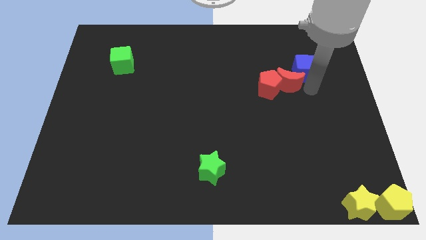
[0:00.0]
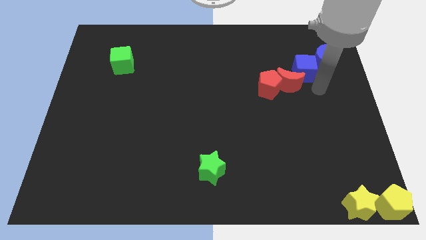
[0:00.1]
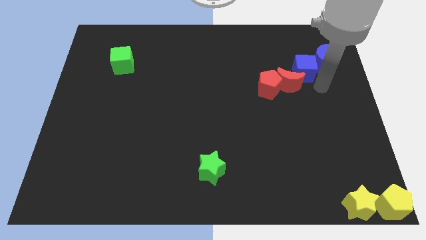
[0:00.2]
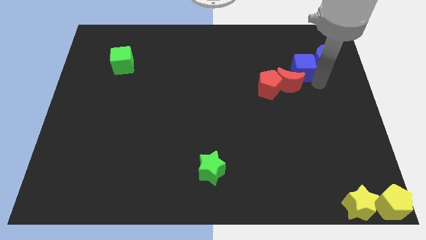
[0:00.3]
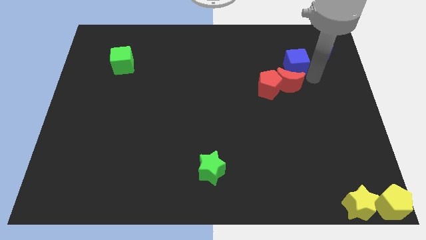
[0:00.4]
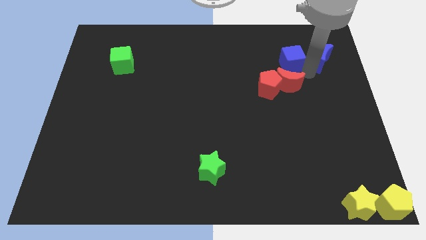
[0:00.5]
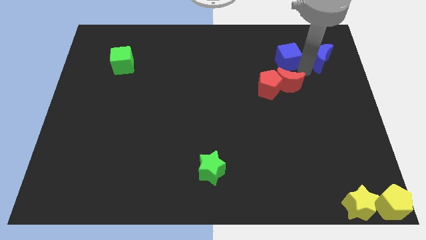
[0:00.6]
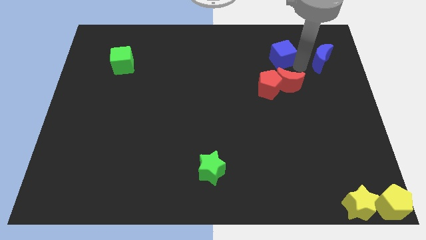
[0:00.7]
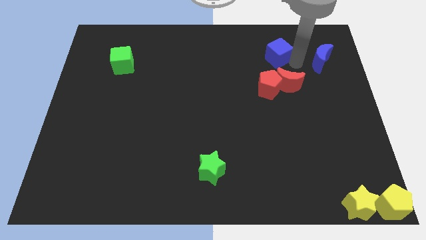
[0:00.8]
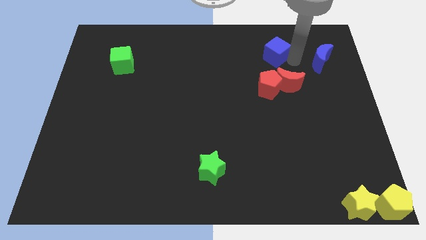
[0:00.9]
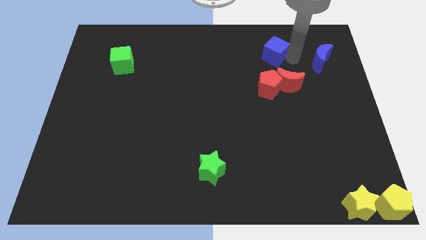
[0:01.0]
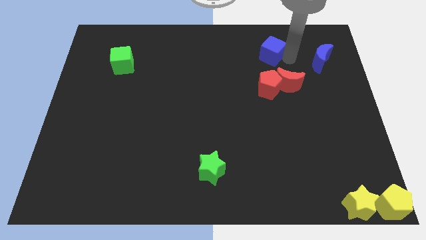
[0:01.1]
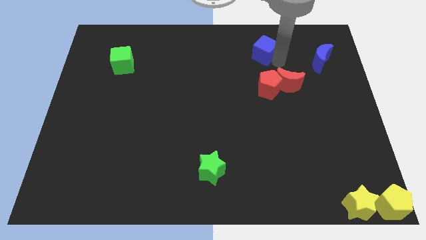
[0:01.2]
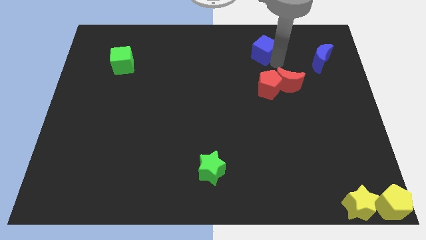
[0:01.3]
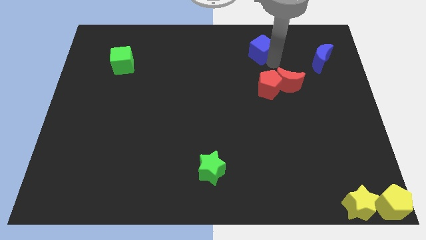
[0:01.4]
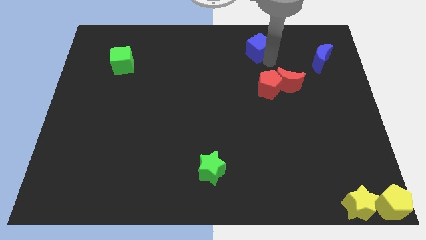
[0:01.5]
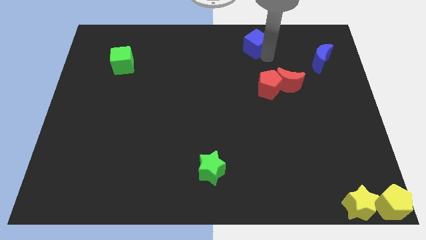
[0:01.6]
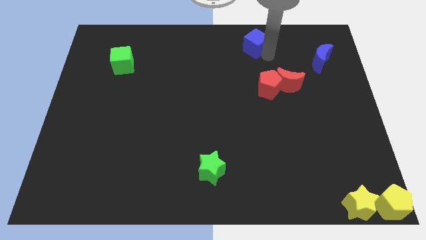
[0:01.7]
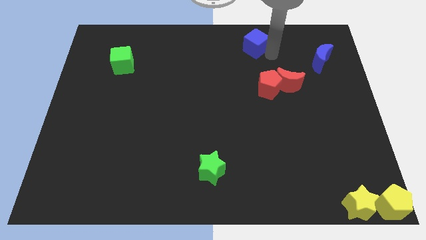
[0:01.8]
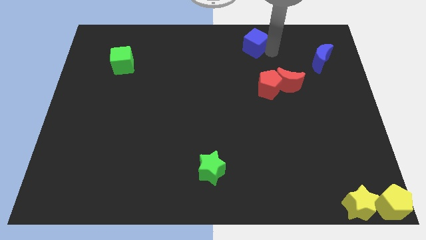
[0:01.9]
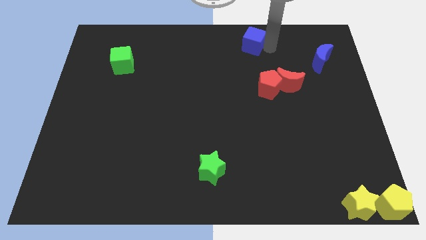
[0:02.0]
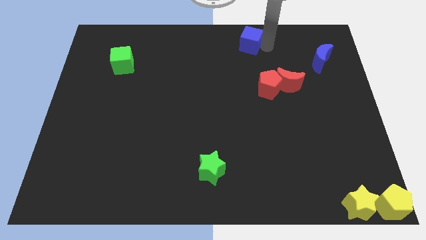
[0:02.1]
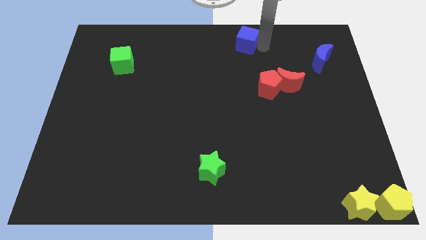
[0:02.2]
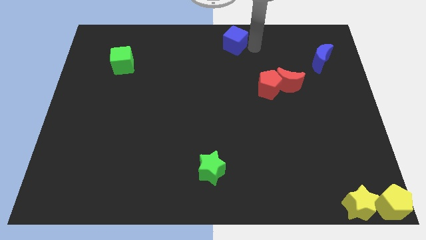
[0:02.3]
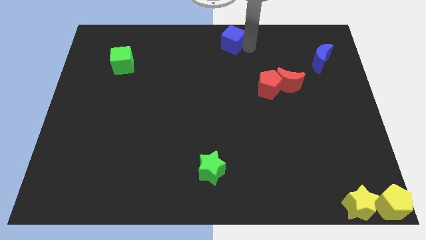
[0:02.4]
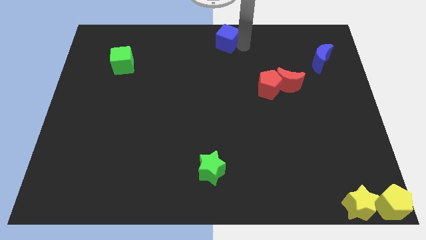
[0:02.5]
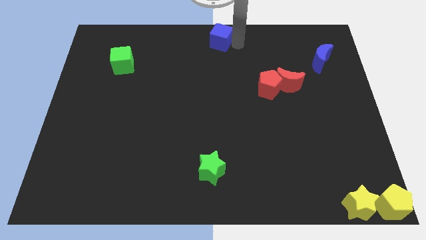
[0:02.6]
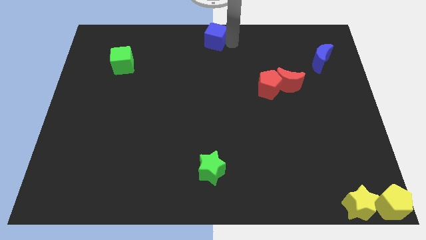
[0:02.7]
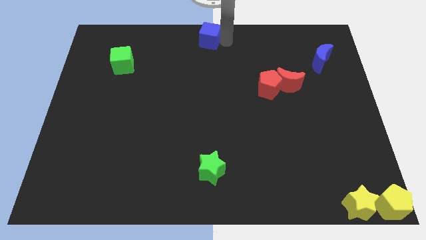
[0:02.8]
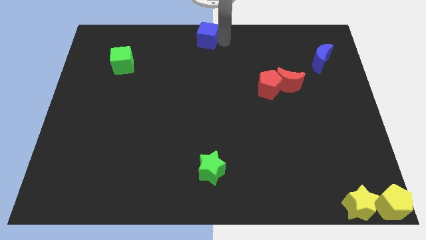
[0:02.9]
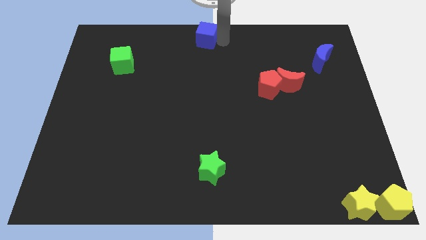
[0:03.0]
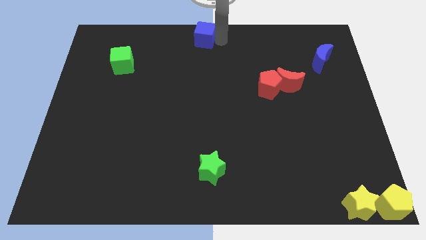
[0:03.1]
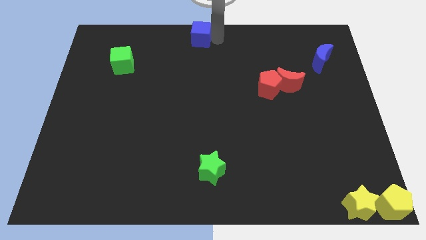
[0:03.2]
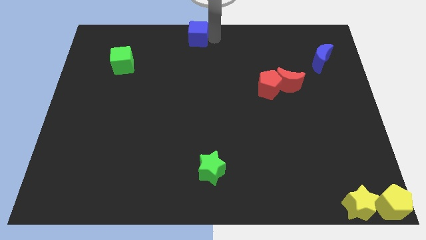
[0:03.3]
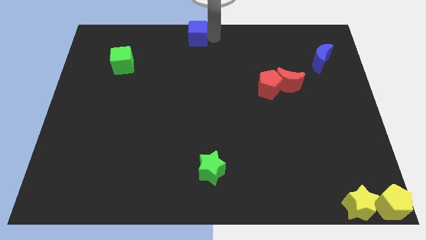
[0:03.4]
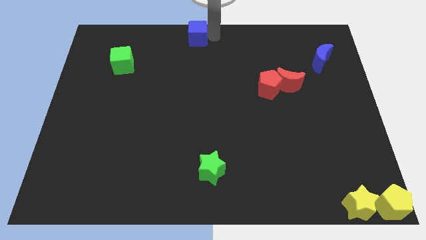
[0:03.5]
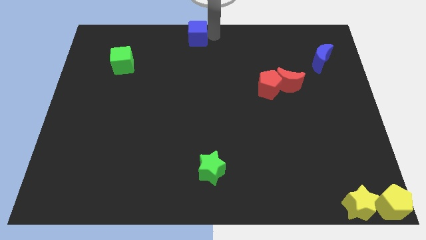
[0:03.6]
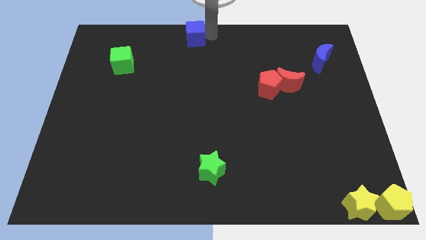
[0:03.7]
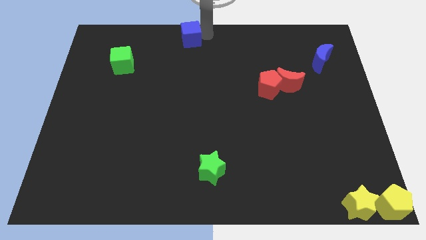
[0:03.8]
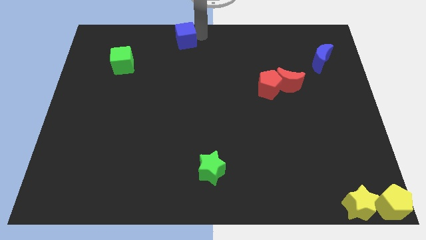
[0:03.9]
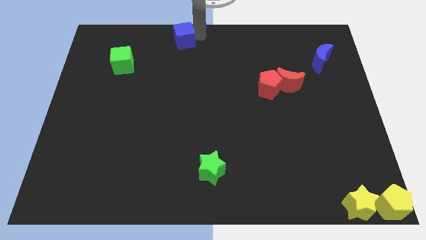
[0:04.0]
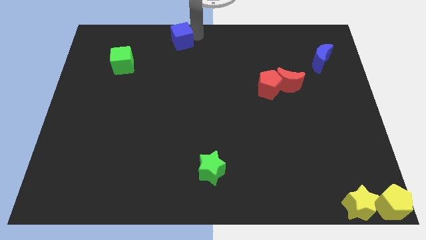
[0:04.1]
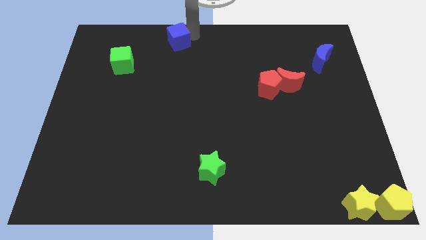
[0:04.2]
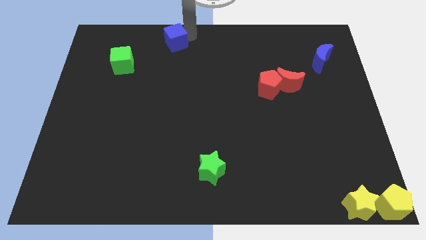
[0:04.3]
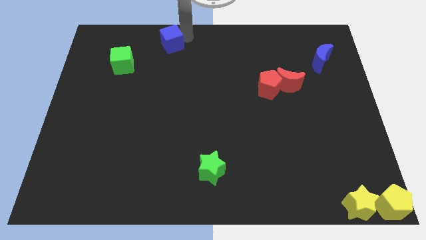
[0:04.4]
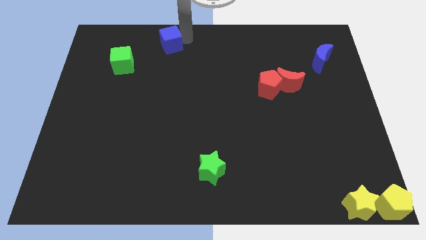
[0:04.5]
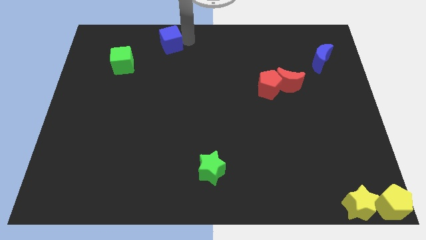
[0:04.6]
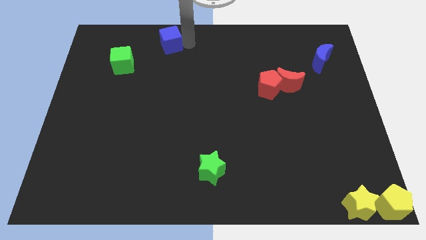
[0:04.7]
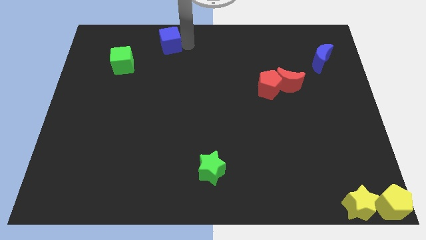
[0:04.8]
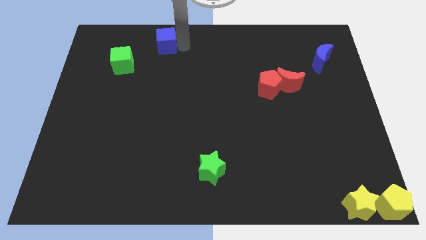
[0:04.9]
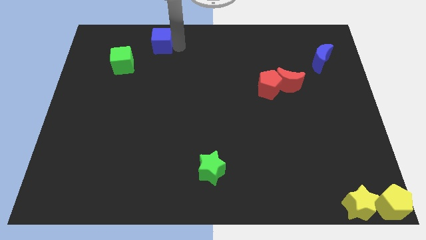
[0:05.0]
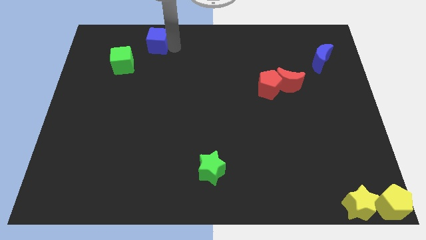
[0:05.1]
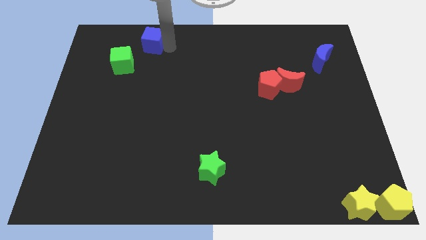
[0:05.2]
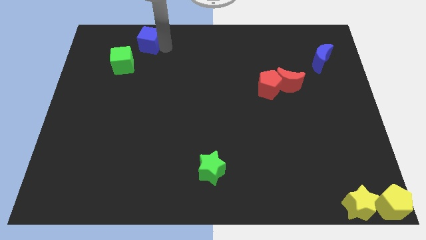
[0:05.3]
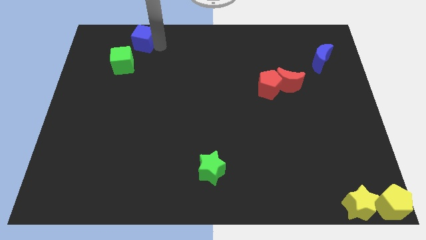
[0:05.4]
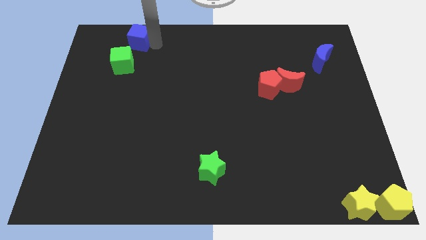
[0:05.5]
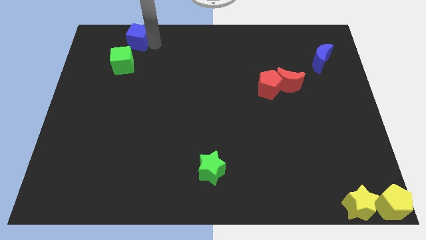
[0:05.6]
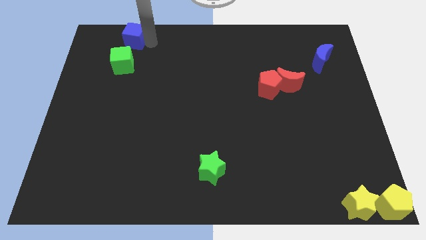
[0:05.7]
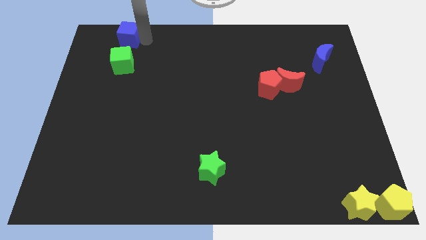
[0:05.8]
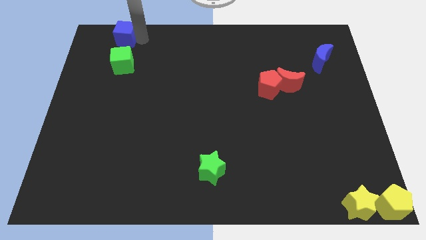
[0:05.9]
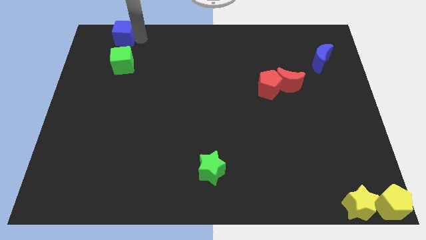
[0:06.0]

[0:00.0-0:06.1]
place the blue cube vertically above the green cube

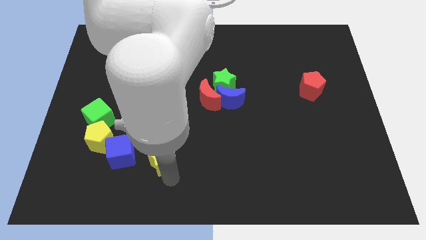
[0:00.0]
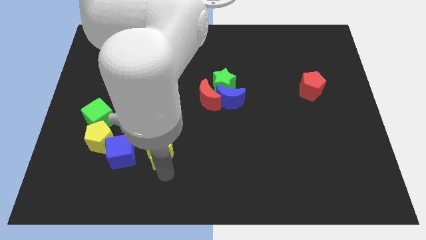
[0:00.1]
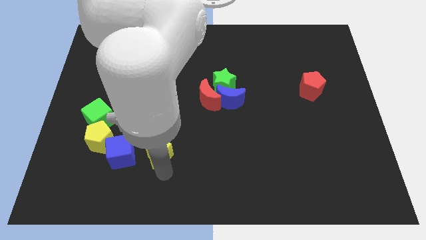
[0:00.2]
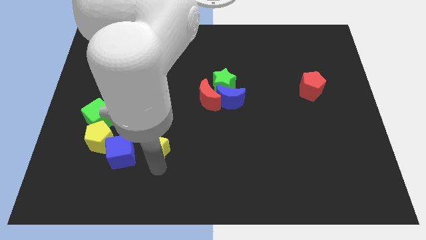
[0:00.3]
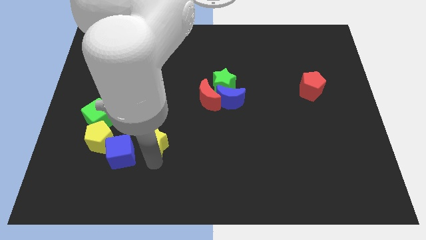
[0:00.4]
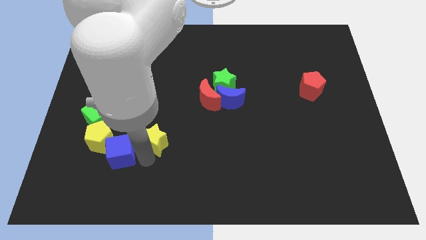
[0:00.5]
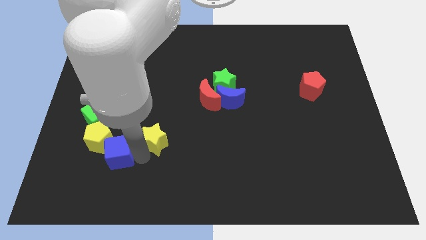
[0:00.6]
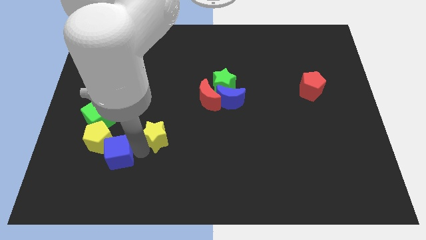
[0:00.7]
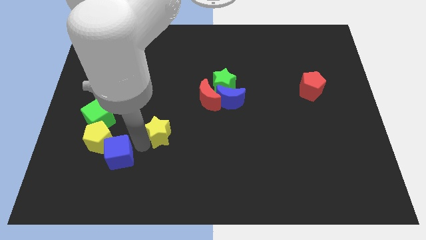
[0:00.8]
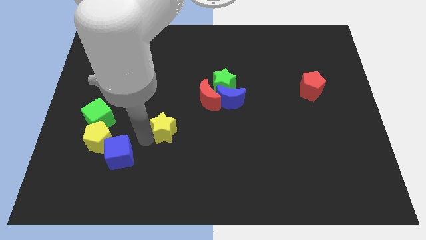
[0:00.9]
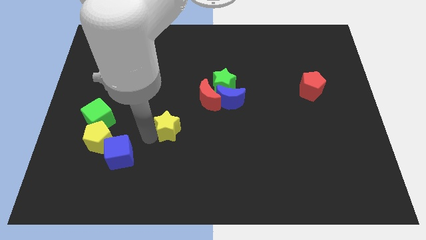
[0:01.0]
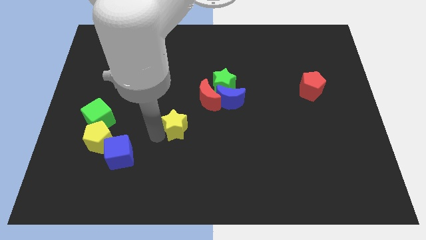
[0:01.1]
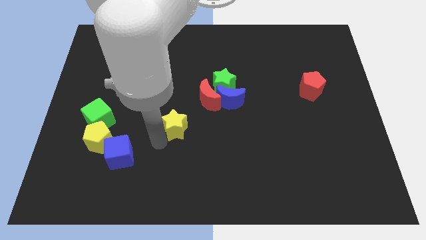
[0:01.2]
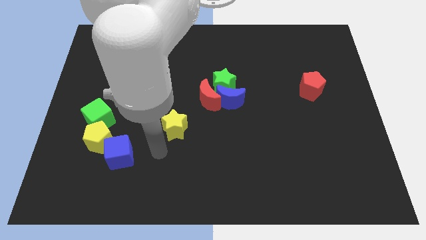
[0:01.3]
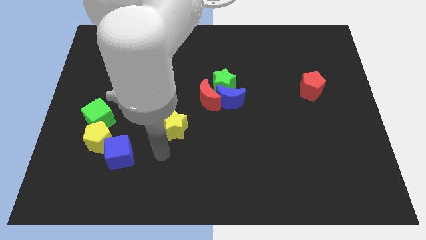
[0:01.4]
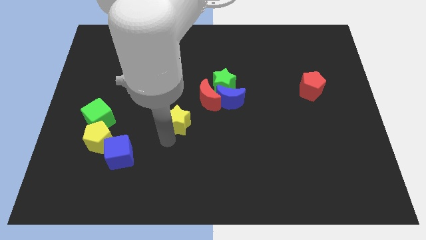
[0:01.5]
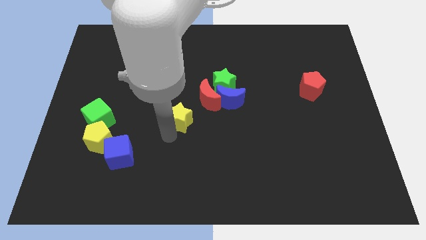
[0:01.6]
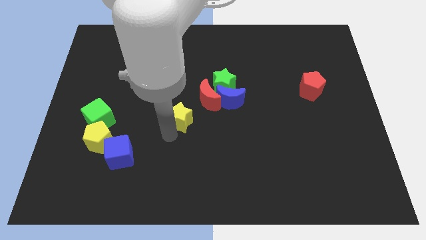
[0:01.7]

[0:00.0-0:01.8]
move the yellow star up slightly

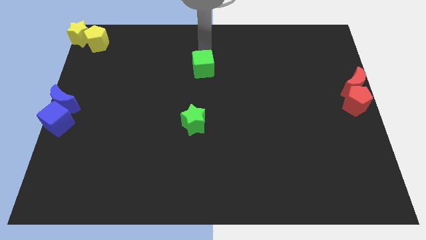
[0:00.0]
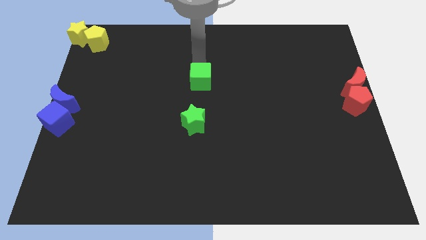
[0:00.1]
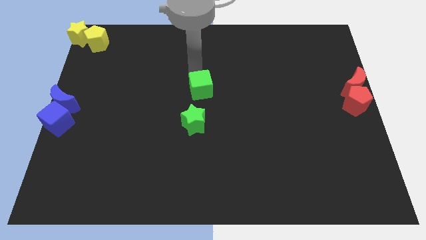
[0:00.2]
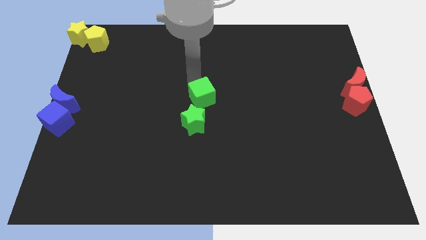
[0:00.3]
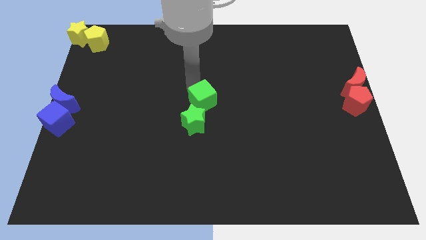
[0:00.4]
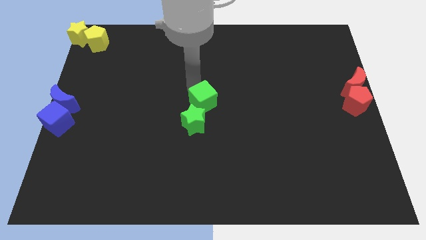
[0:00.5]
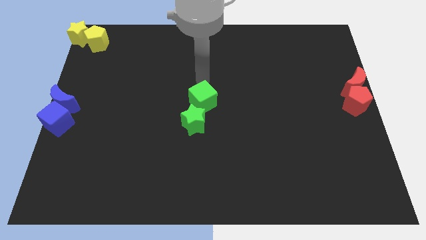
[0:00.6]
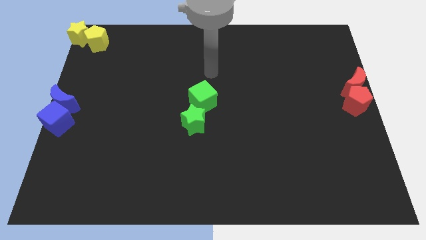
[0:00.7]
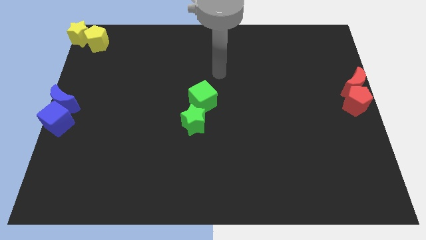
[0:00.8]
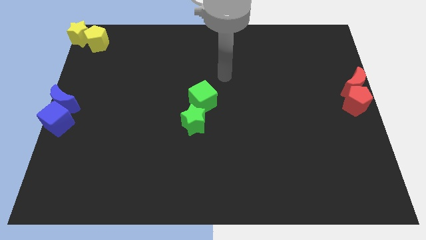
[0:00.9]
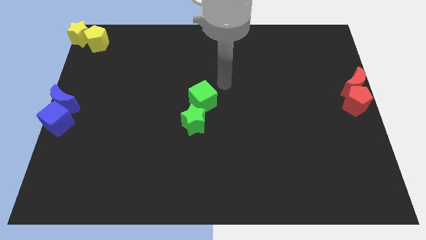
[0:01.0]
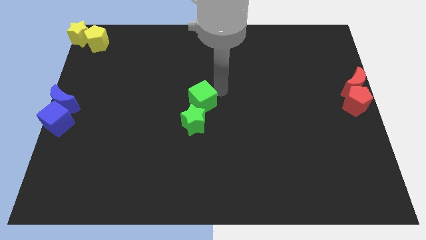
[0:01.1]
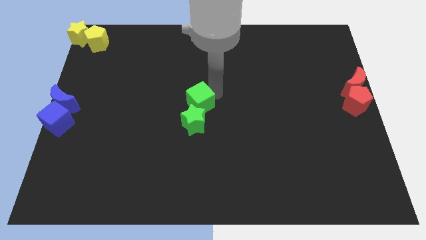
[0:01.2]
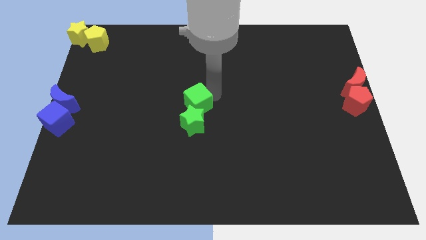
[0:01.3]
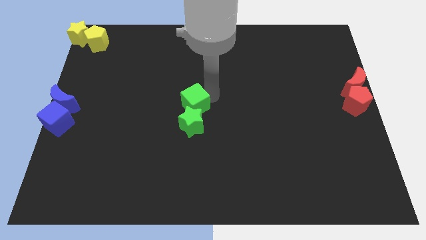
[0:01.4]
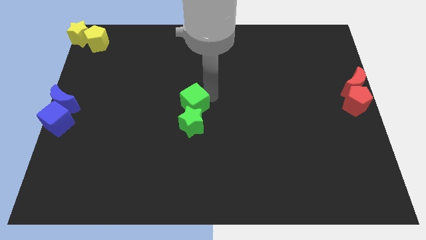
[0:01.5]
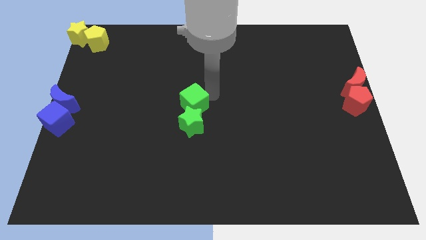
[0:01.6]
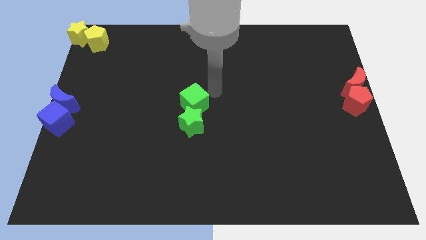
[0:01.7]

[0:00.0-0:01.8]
push the green cube into the green star
